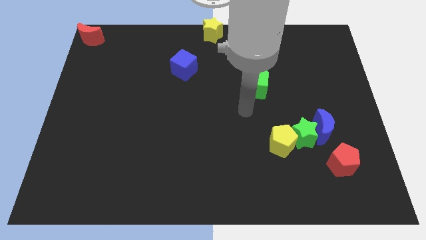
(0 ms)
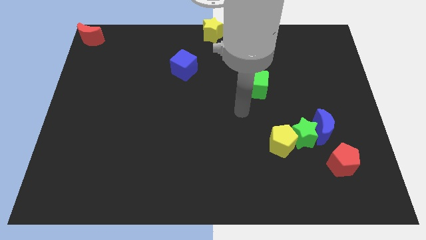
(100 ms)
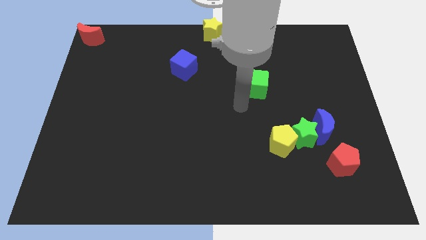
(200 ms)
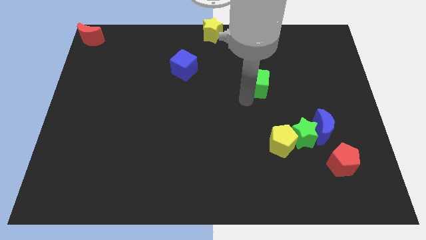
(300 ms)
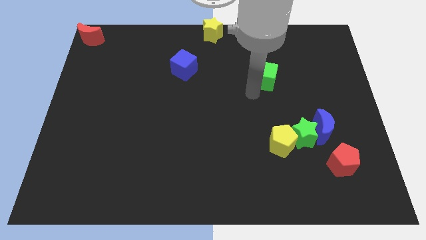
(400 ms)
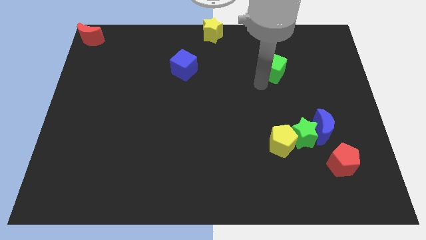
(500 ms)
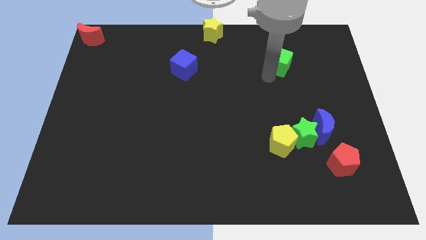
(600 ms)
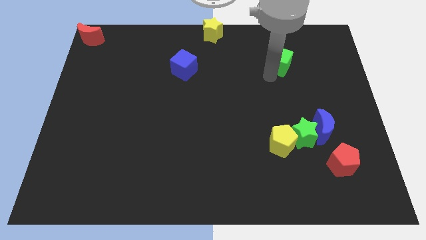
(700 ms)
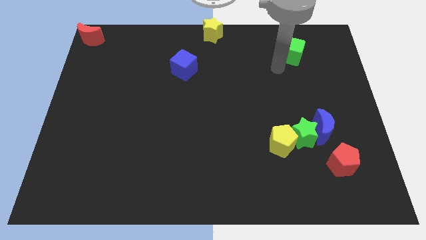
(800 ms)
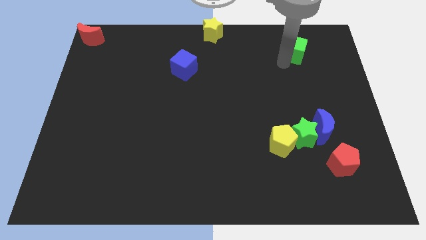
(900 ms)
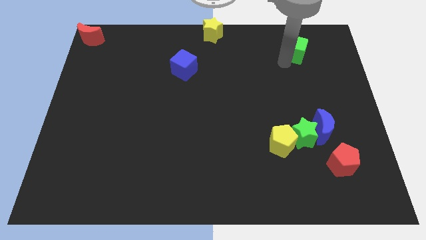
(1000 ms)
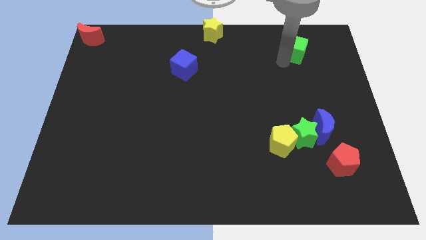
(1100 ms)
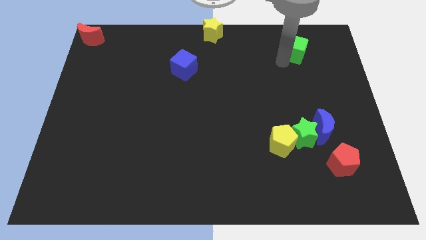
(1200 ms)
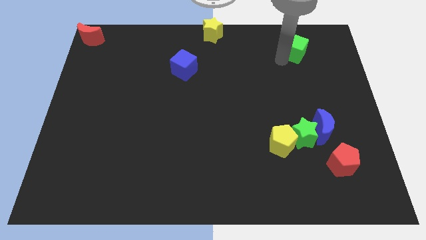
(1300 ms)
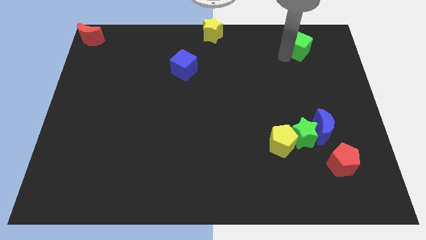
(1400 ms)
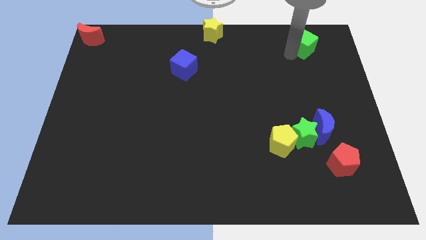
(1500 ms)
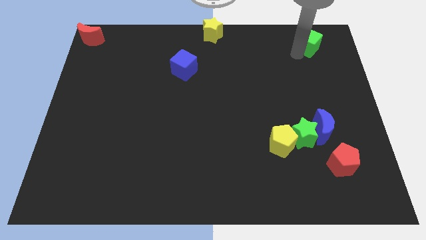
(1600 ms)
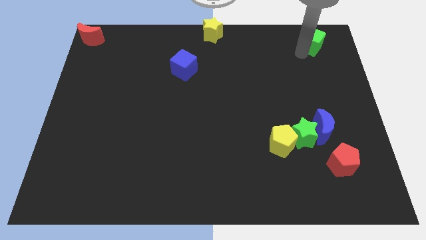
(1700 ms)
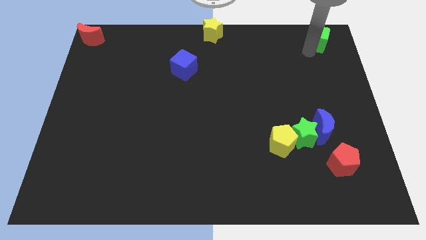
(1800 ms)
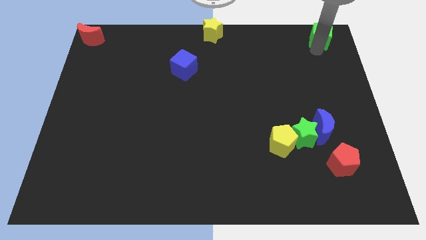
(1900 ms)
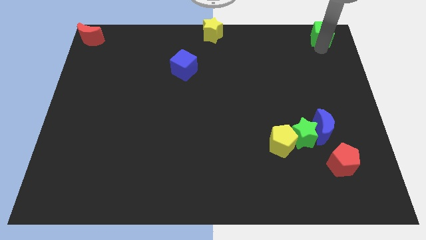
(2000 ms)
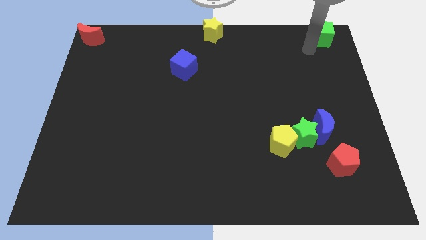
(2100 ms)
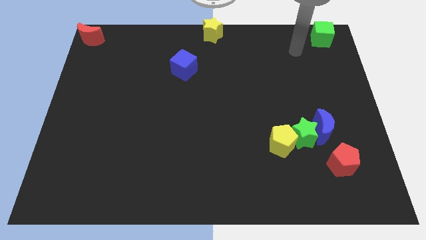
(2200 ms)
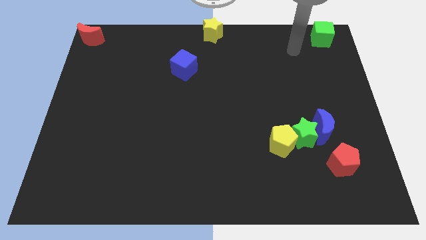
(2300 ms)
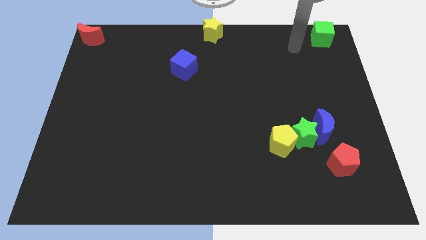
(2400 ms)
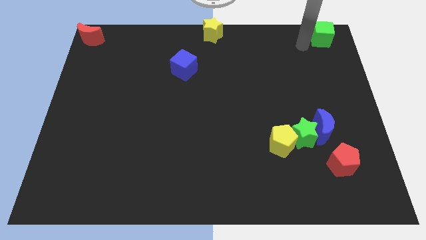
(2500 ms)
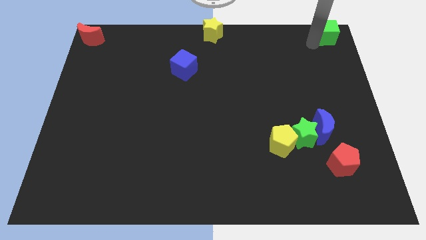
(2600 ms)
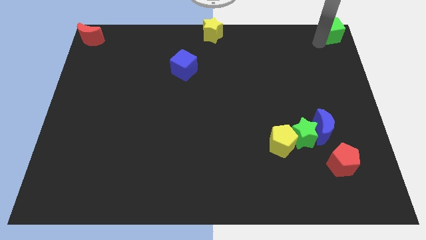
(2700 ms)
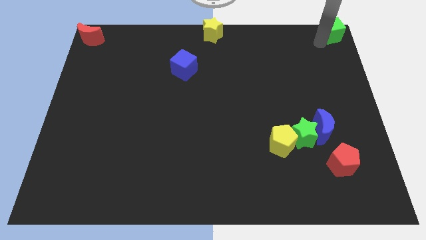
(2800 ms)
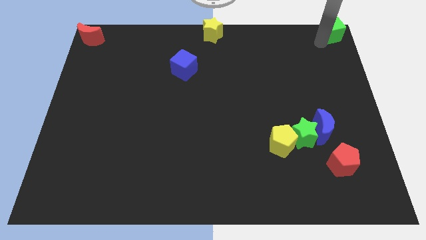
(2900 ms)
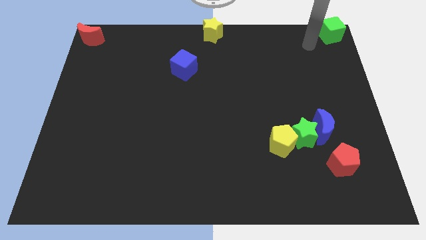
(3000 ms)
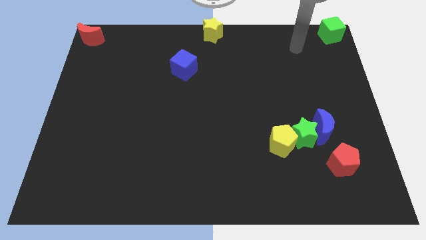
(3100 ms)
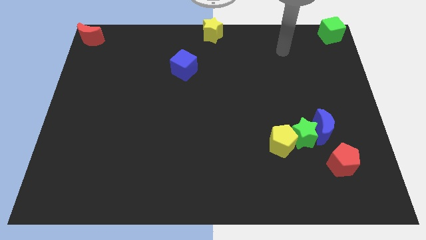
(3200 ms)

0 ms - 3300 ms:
place the green cube at the top right corner of the board

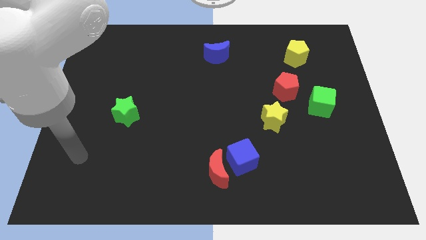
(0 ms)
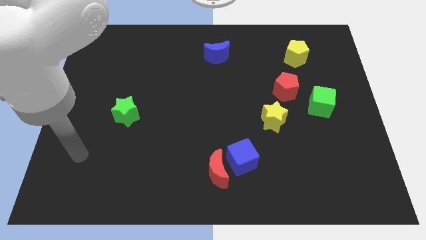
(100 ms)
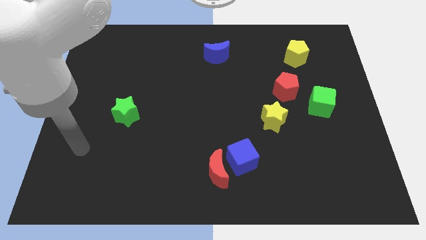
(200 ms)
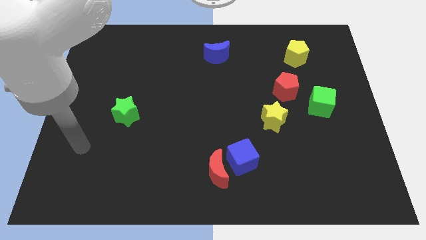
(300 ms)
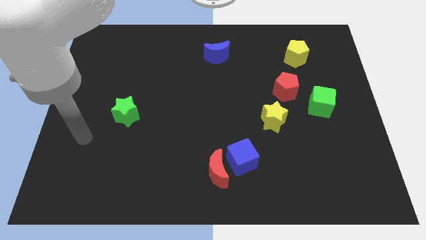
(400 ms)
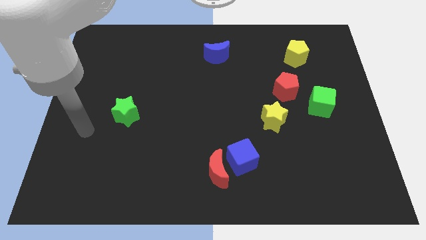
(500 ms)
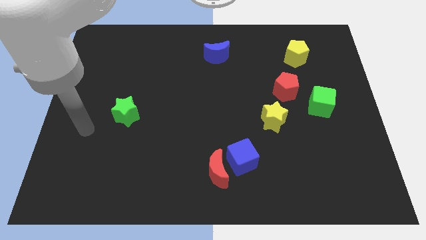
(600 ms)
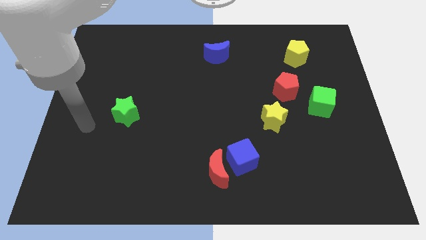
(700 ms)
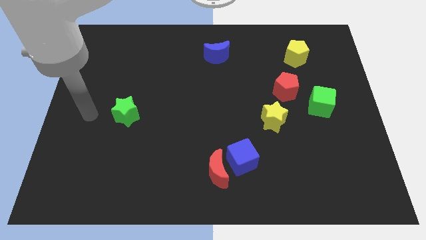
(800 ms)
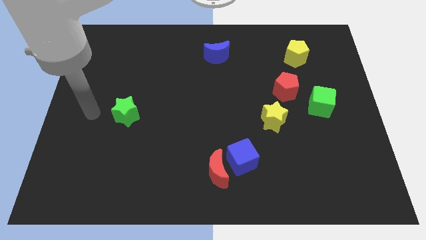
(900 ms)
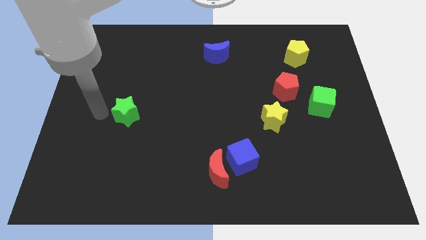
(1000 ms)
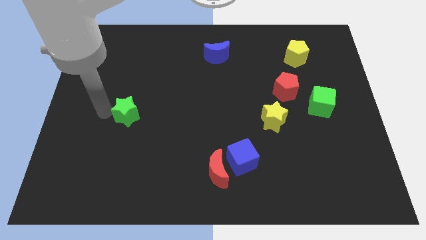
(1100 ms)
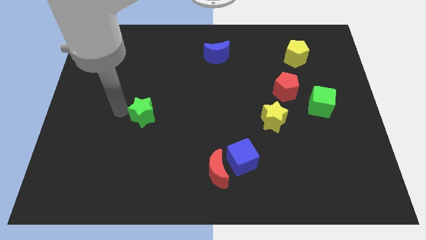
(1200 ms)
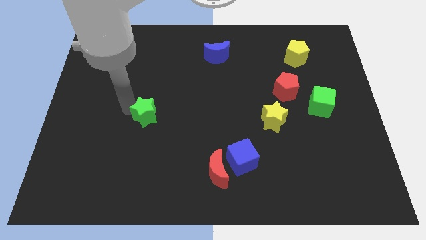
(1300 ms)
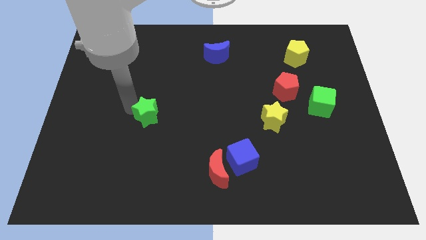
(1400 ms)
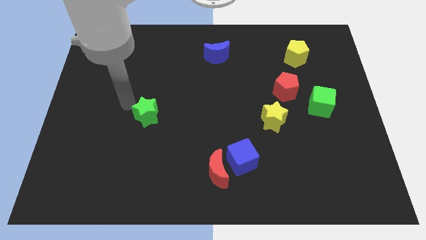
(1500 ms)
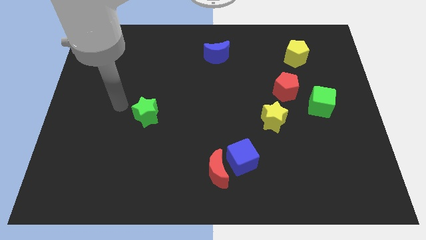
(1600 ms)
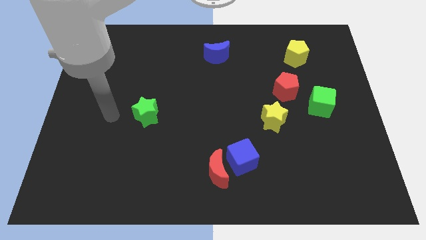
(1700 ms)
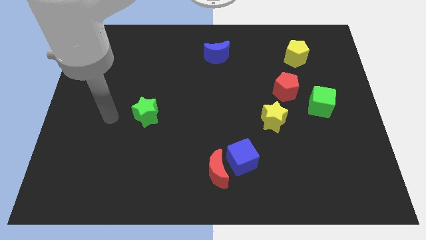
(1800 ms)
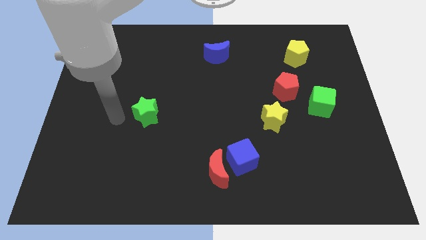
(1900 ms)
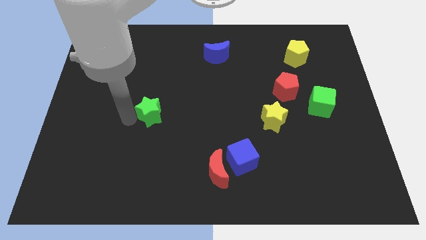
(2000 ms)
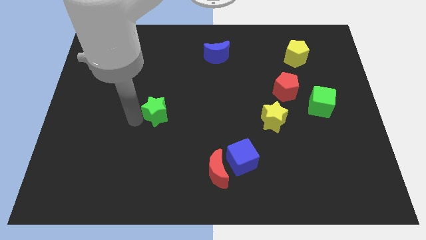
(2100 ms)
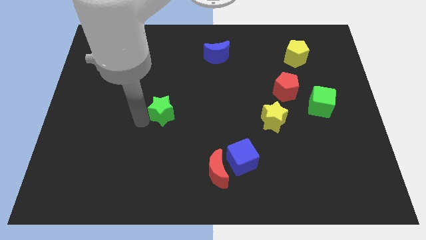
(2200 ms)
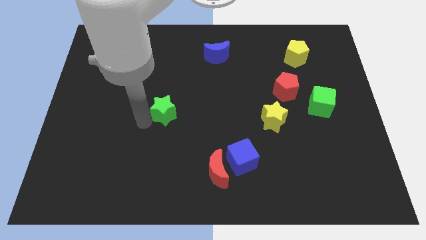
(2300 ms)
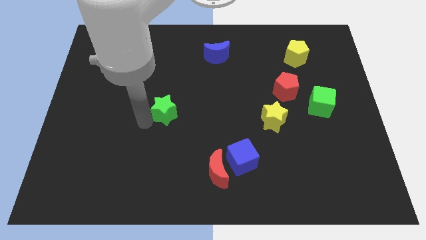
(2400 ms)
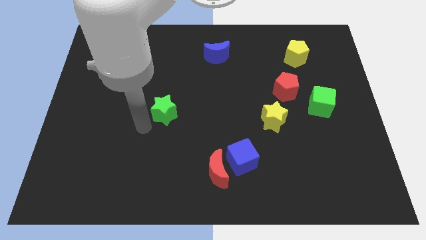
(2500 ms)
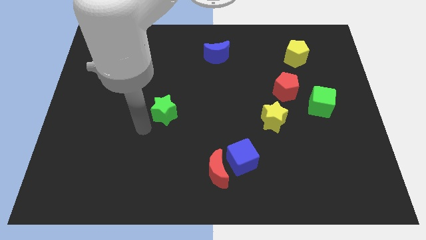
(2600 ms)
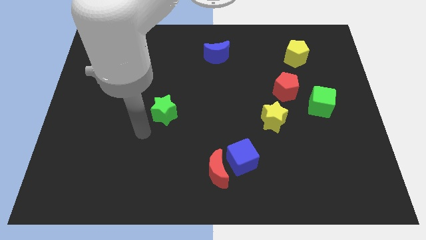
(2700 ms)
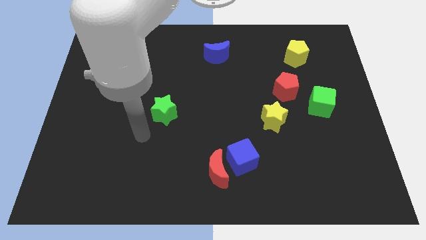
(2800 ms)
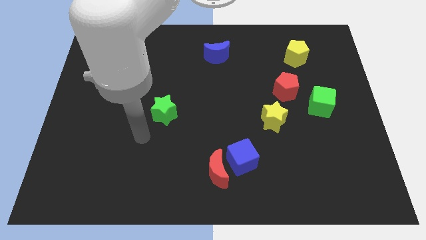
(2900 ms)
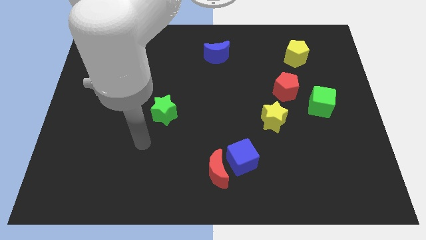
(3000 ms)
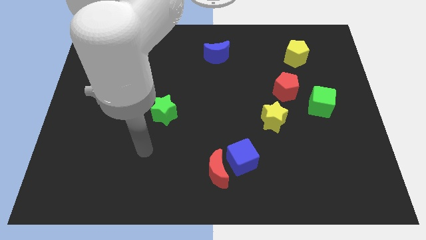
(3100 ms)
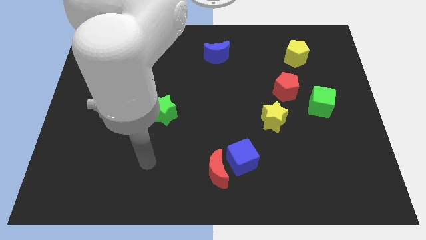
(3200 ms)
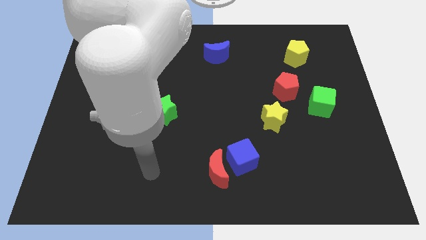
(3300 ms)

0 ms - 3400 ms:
push the green star towards the center of the board

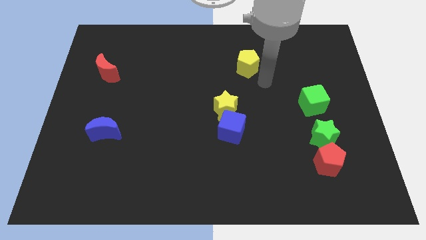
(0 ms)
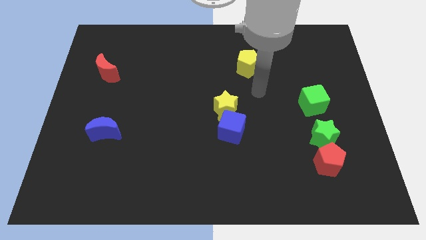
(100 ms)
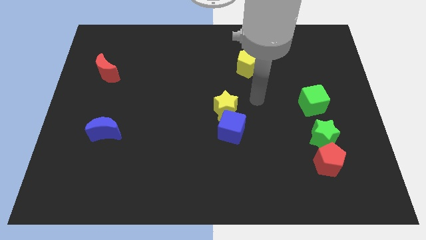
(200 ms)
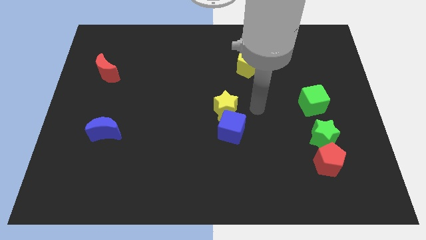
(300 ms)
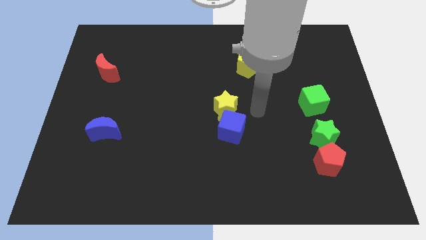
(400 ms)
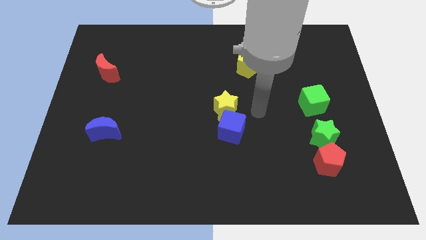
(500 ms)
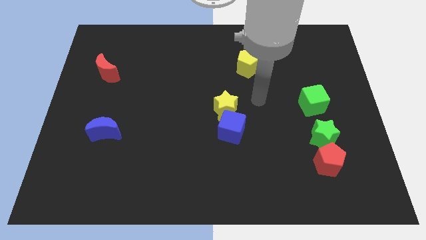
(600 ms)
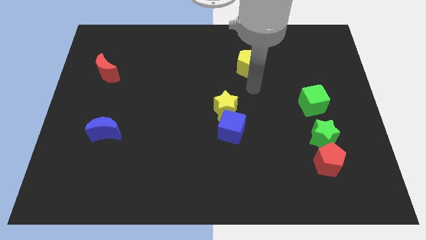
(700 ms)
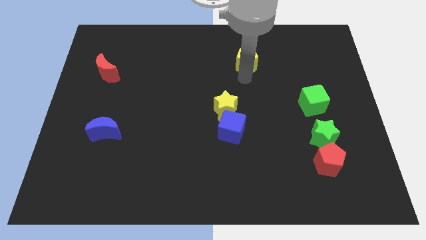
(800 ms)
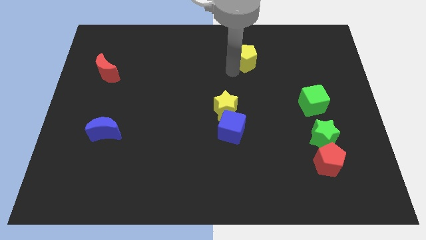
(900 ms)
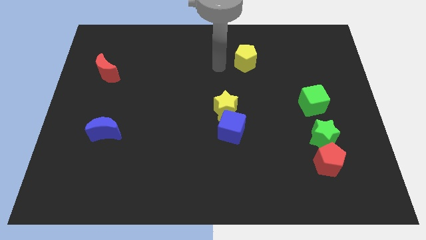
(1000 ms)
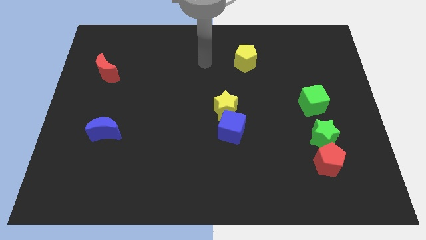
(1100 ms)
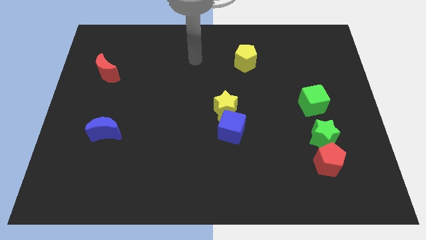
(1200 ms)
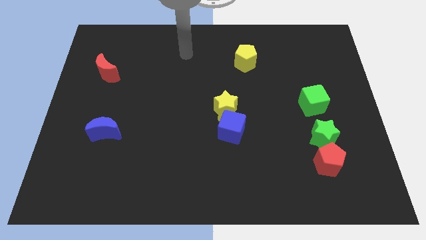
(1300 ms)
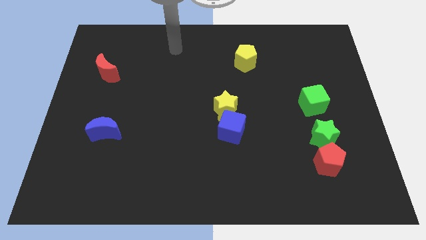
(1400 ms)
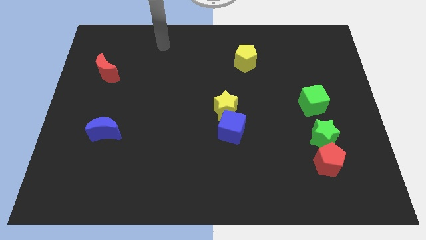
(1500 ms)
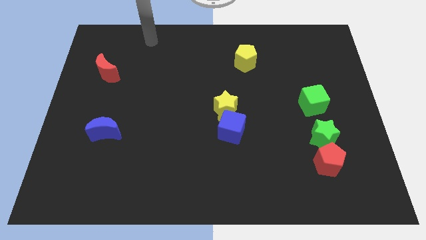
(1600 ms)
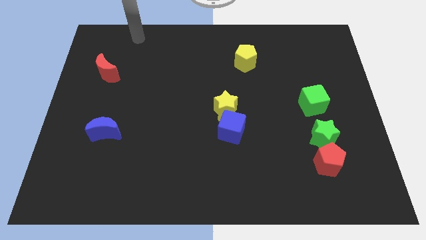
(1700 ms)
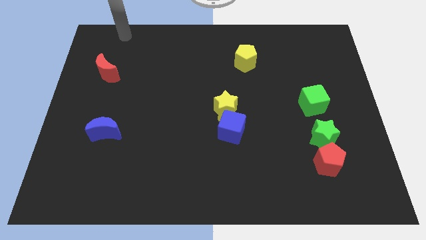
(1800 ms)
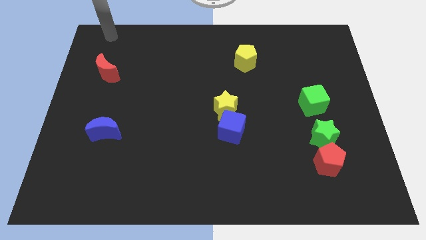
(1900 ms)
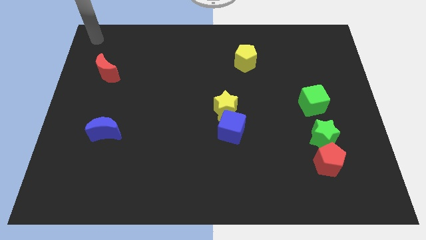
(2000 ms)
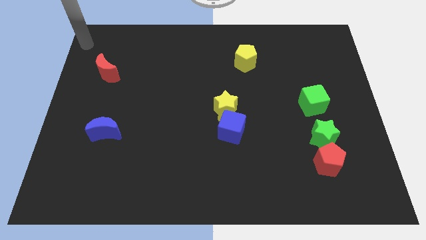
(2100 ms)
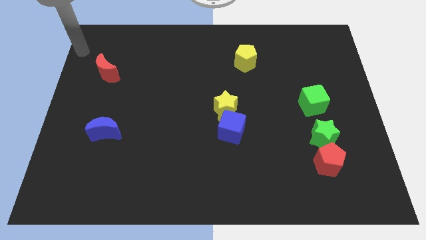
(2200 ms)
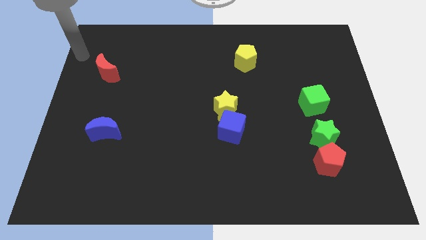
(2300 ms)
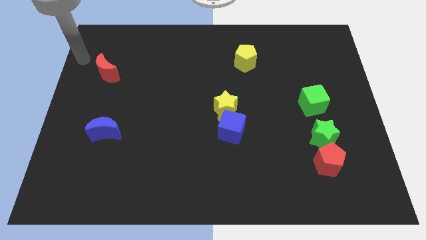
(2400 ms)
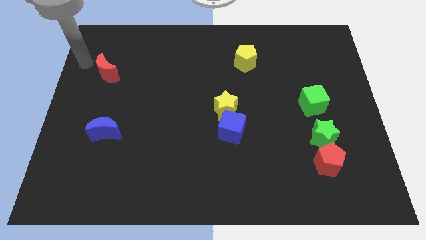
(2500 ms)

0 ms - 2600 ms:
slightly move the yellow pentagon to the top of the board
